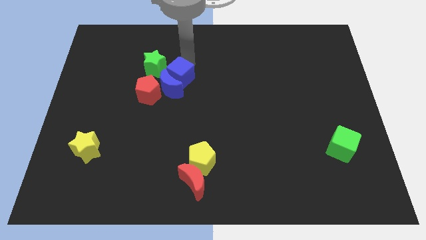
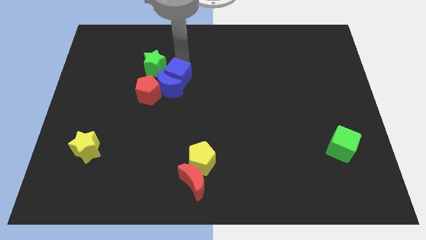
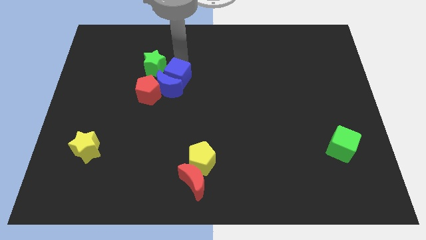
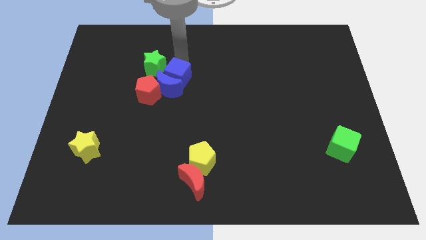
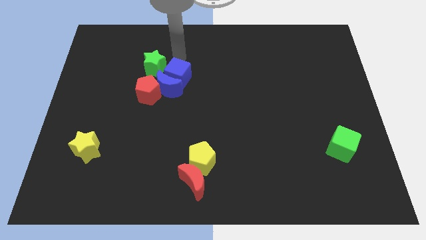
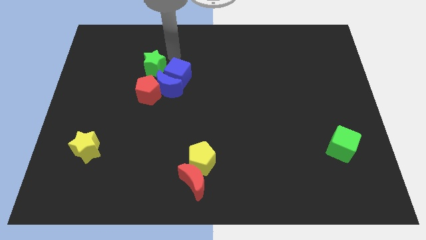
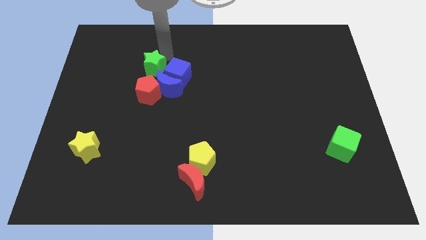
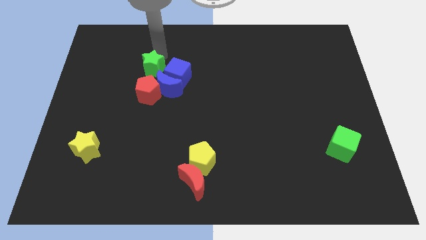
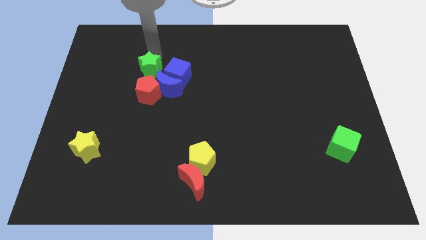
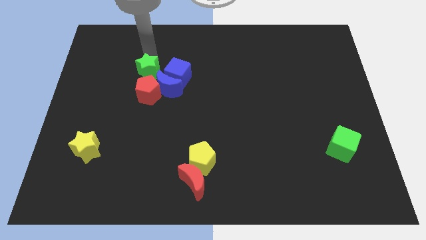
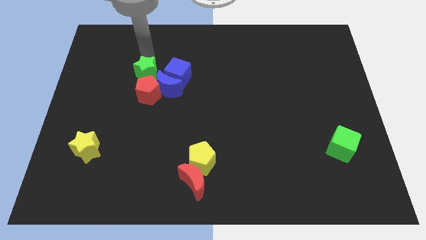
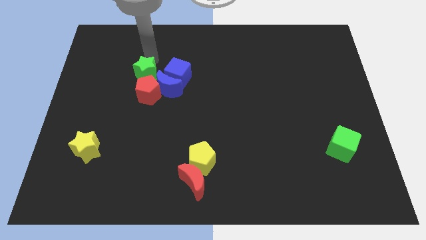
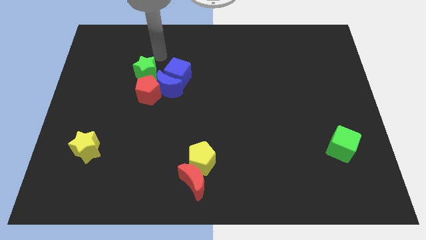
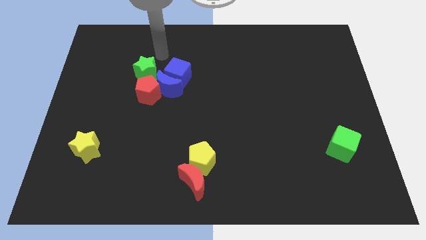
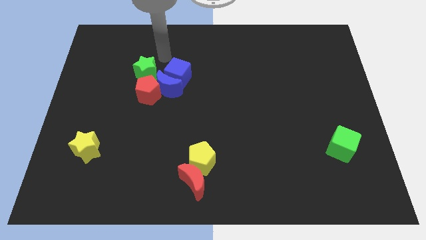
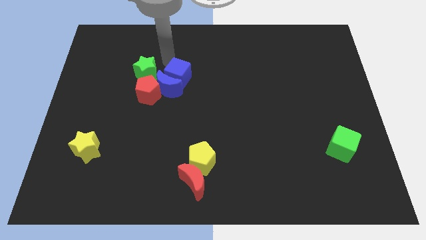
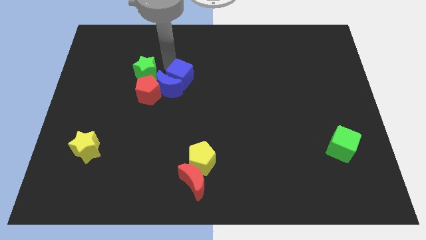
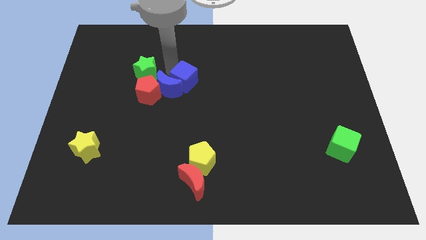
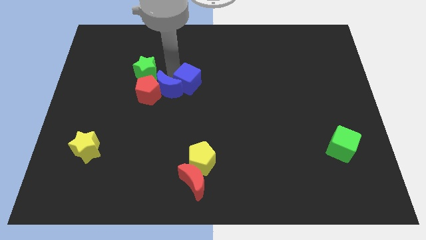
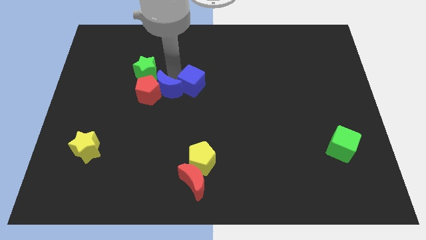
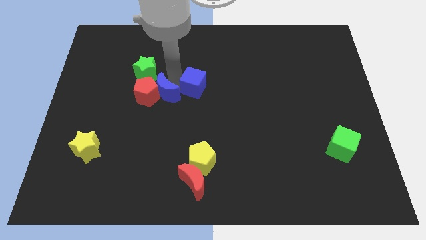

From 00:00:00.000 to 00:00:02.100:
separate the green star and blue cube from each other

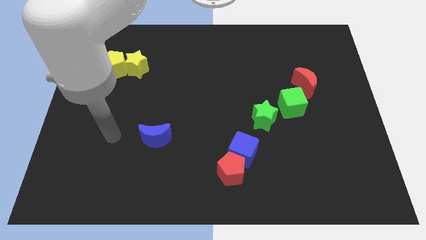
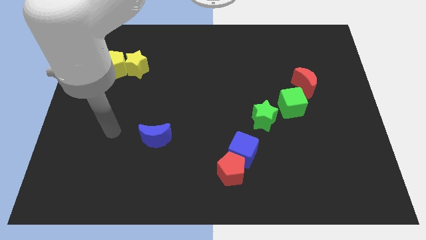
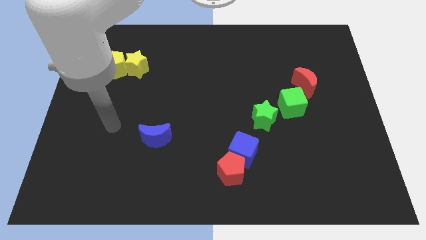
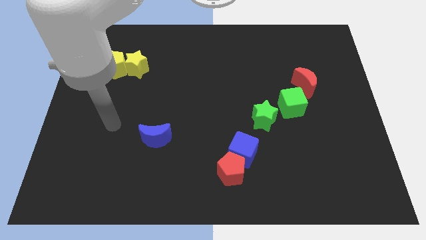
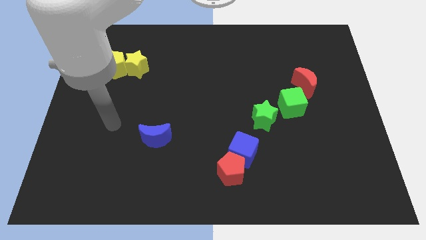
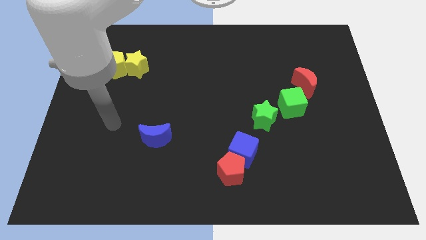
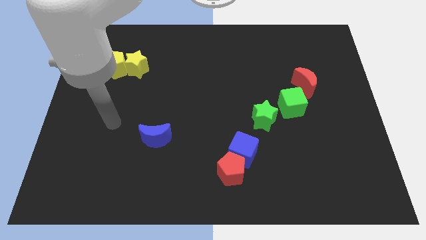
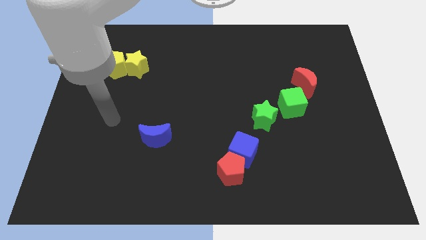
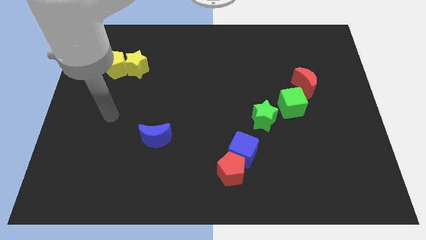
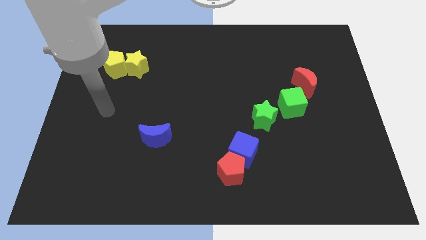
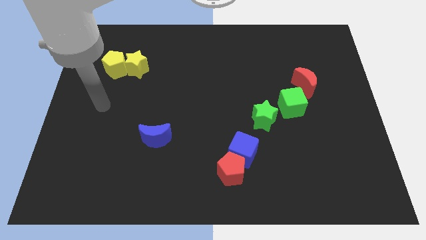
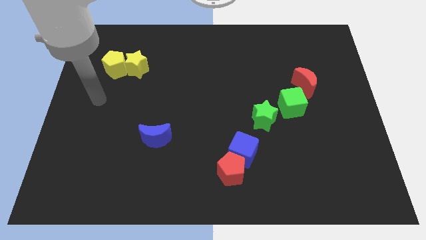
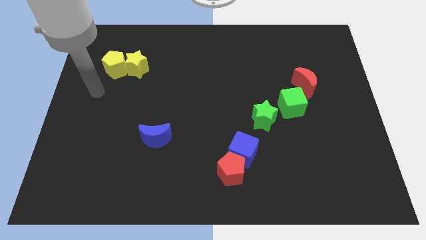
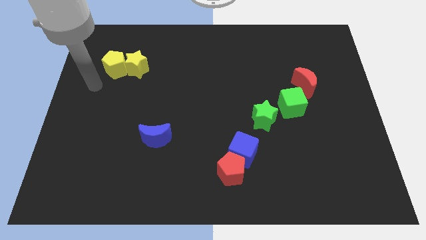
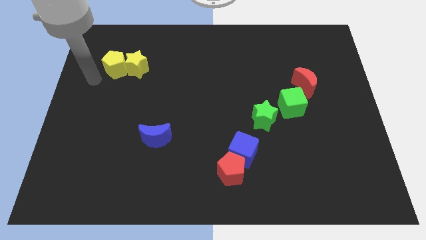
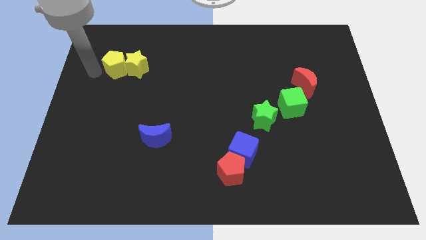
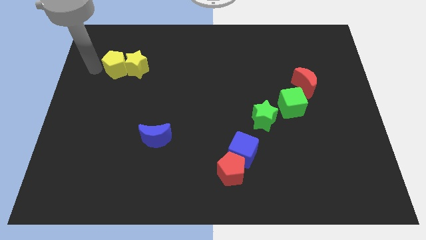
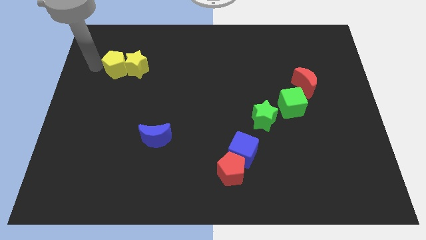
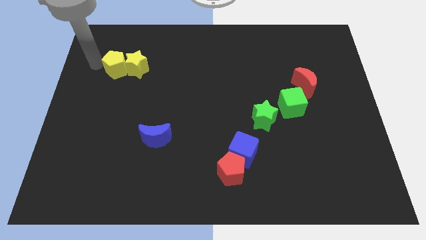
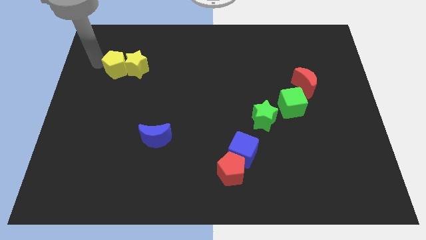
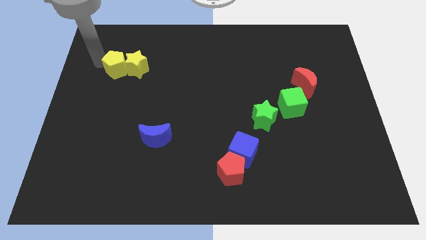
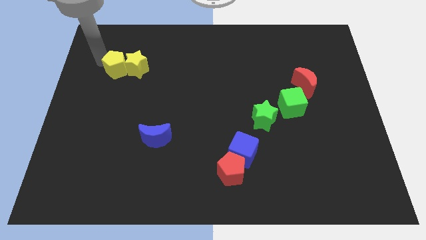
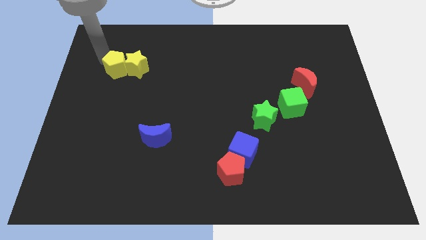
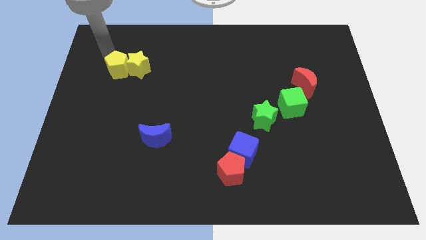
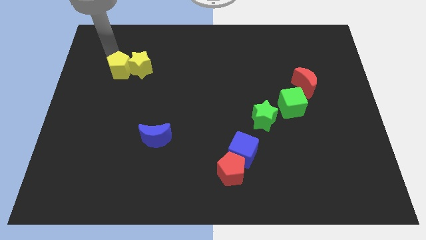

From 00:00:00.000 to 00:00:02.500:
place the arm to the top of the yellow pentagon

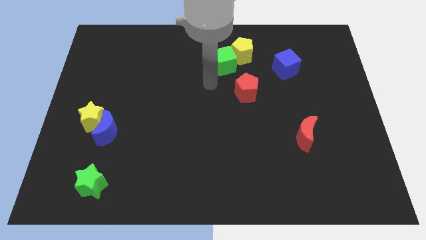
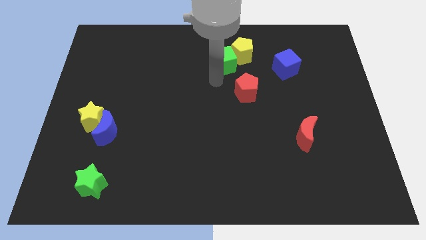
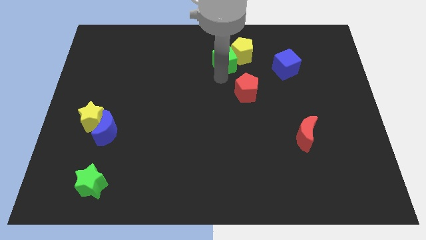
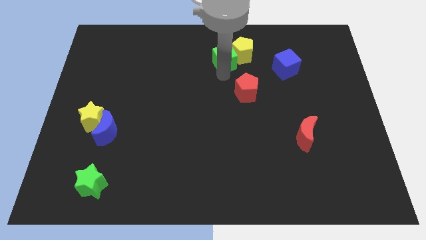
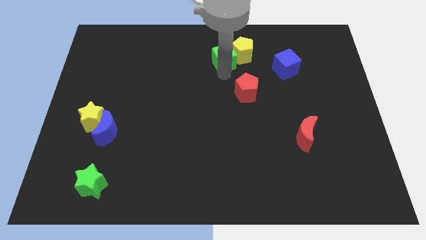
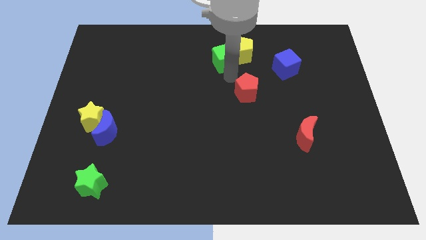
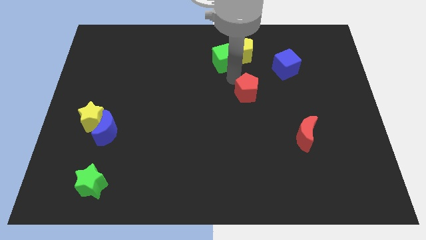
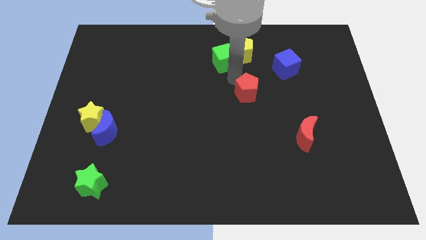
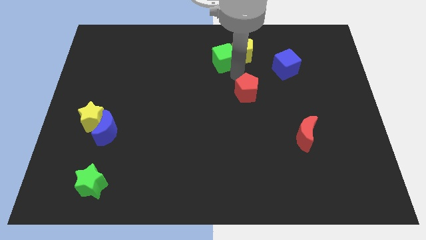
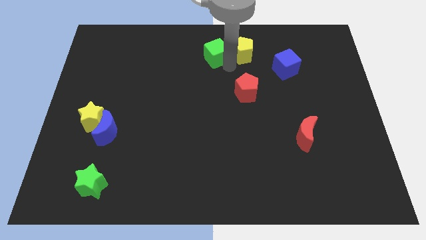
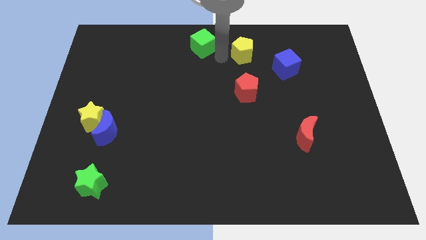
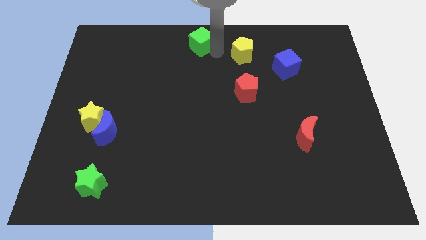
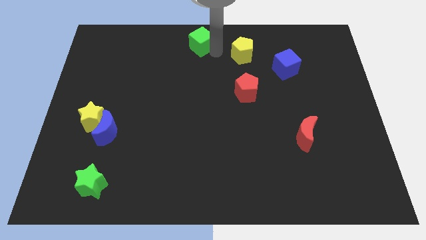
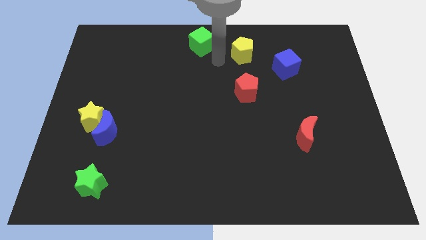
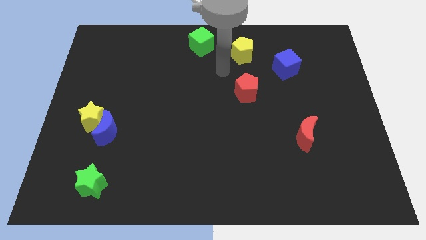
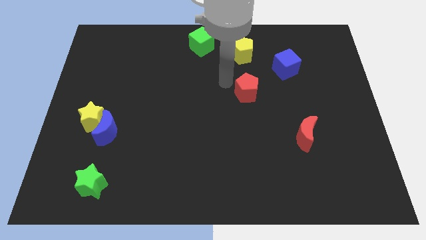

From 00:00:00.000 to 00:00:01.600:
move the green cube to the top center of the board

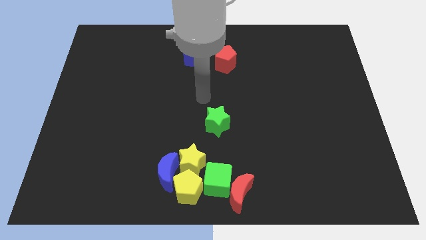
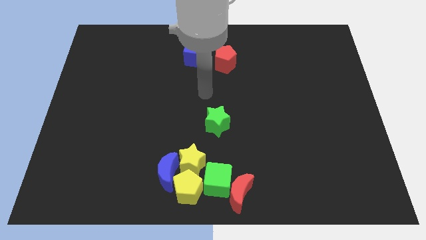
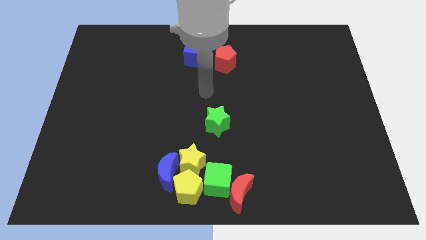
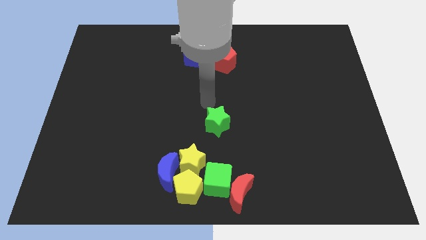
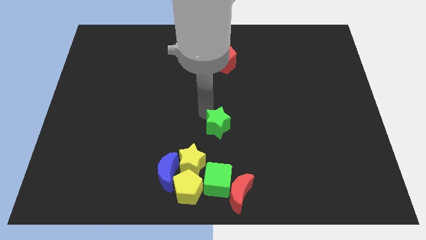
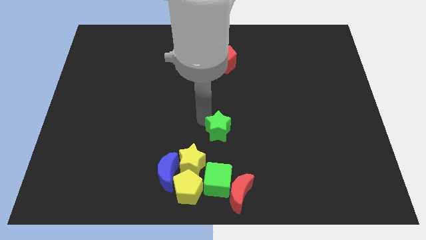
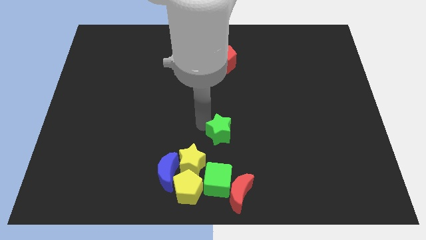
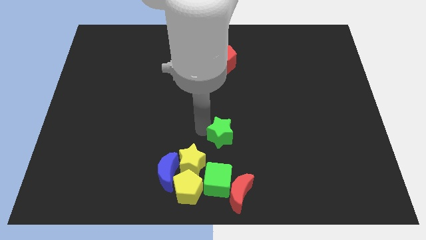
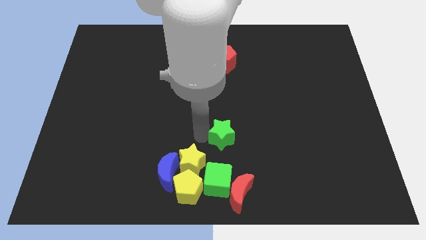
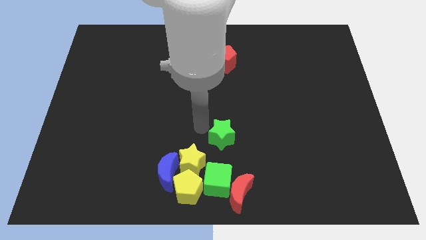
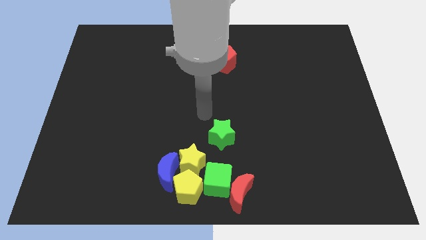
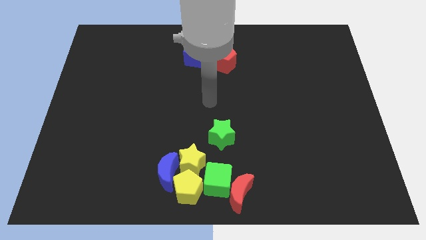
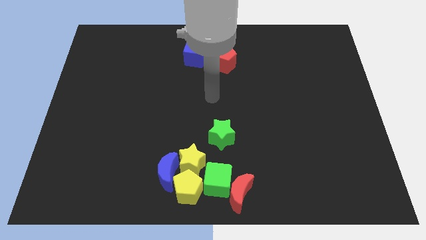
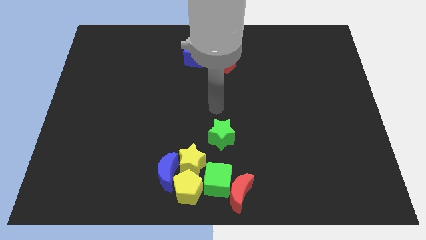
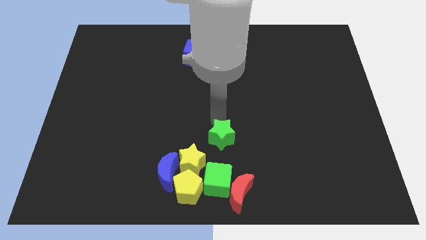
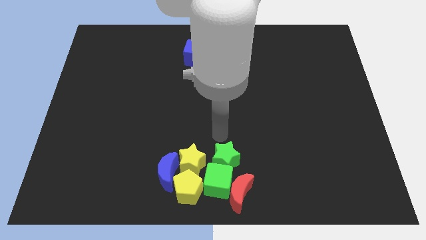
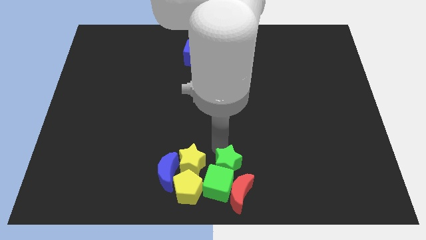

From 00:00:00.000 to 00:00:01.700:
push the green star to the top of the green cube

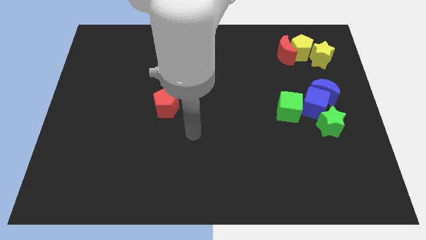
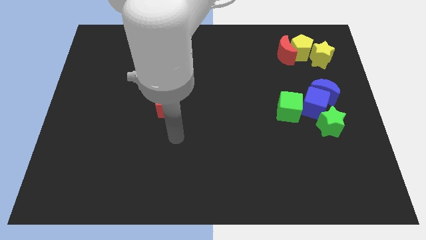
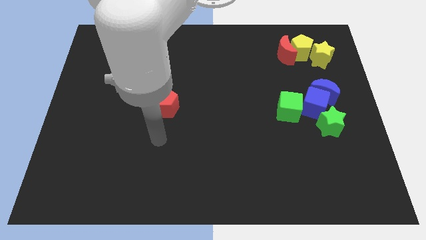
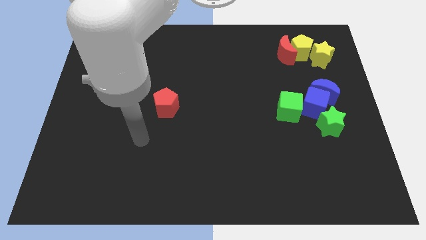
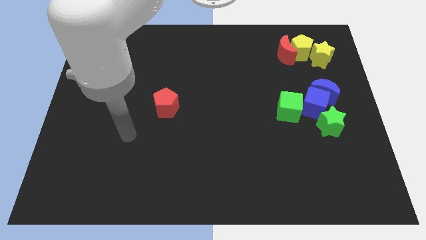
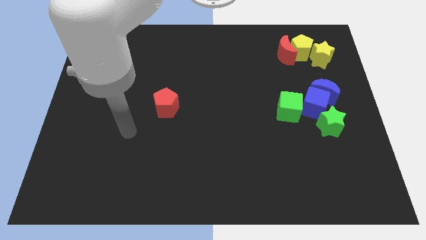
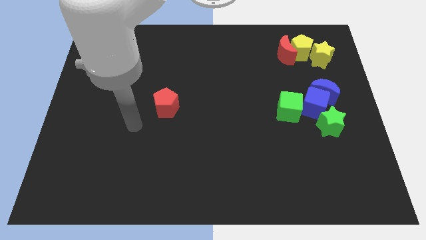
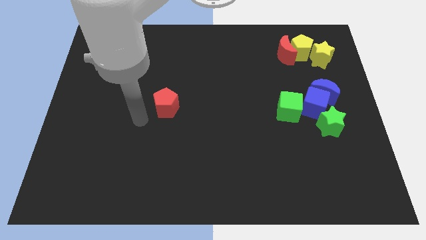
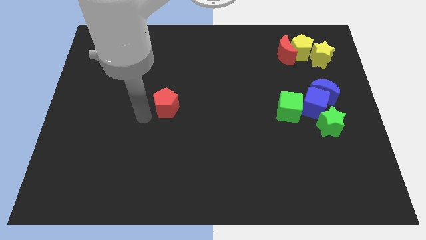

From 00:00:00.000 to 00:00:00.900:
place arm at the bottom of red pentagon

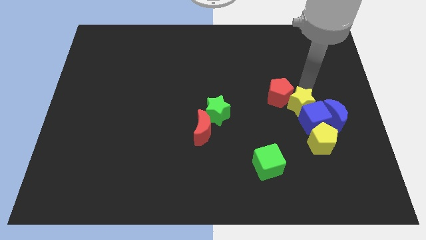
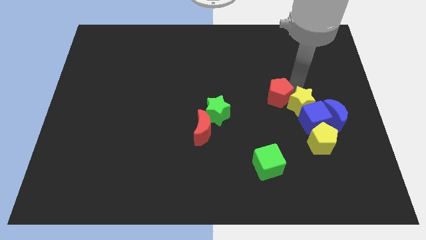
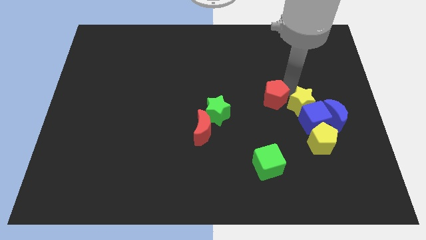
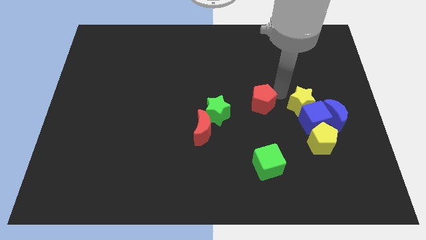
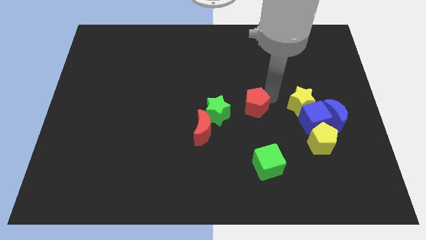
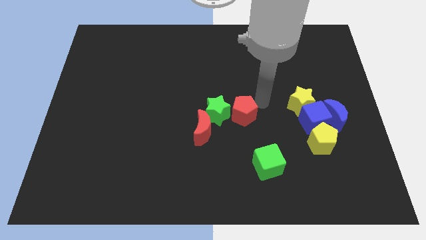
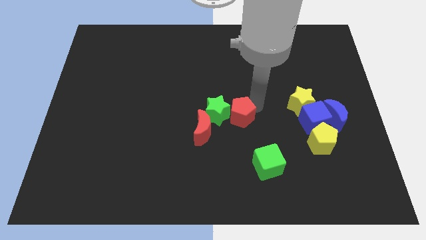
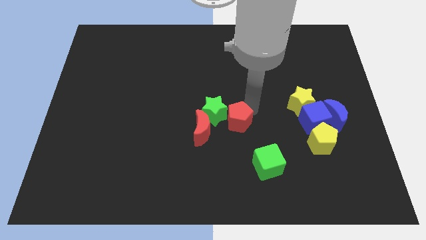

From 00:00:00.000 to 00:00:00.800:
push the red pentagon to the right of the green star
